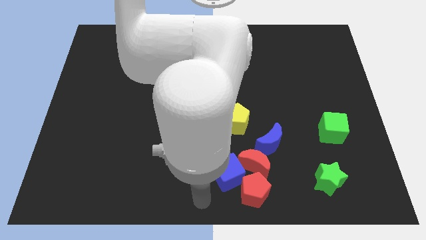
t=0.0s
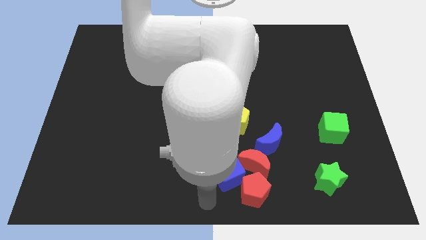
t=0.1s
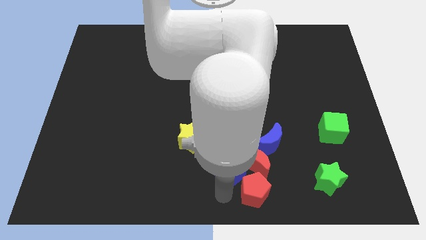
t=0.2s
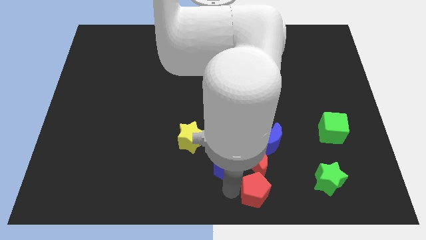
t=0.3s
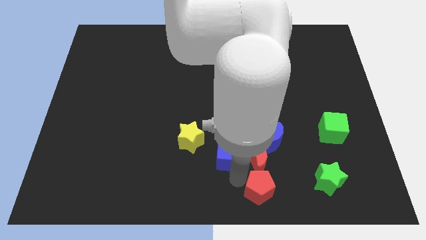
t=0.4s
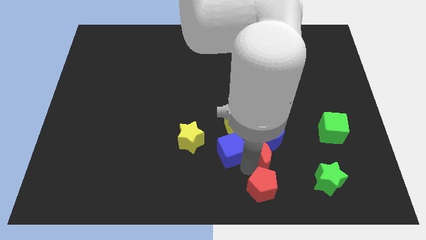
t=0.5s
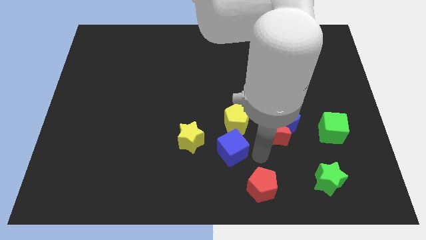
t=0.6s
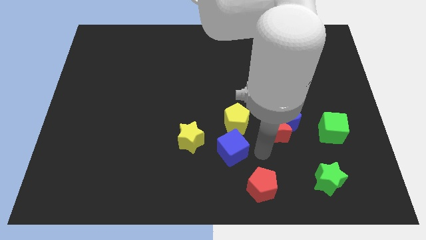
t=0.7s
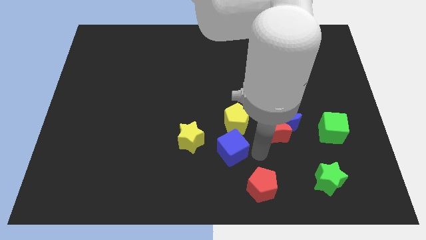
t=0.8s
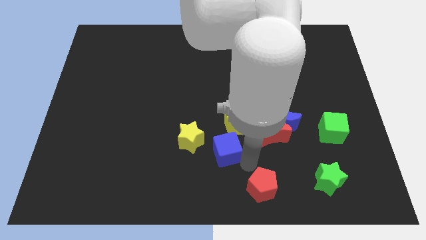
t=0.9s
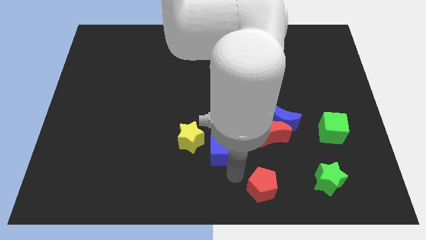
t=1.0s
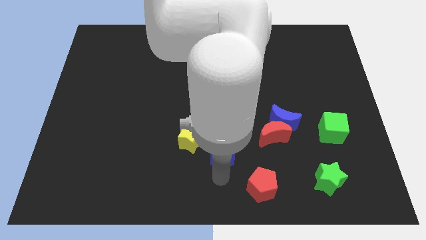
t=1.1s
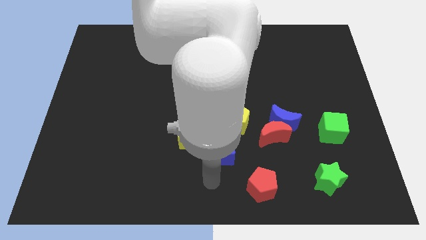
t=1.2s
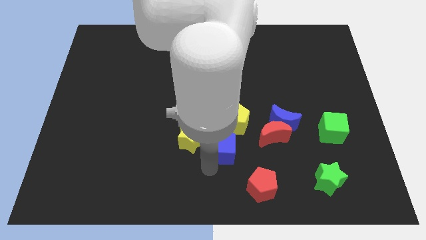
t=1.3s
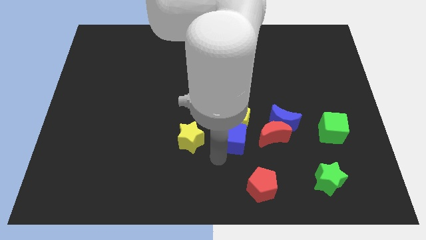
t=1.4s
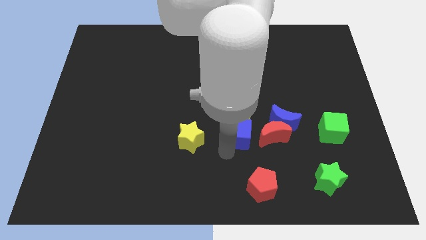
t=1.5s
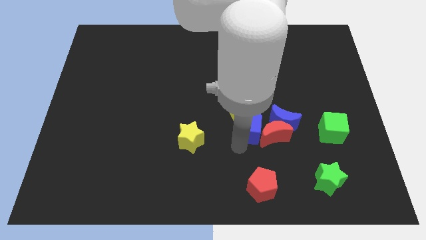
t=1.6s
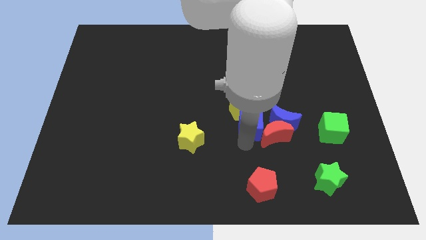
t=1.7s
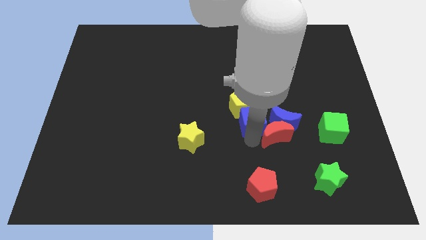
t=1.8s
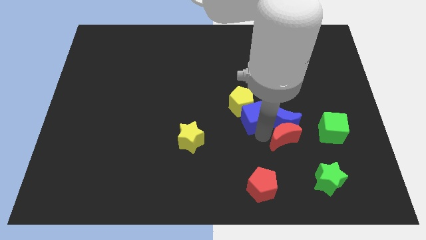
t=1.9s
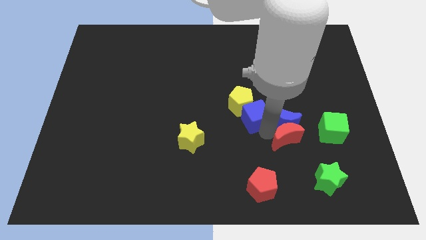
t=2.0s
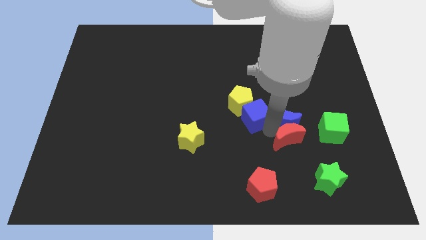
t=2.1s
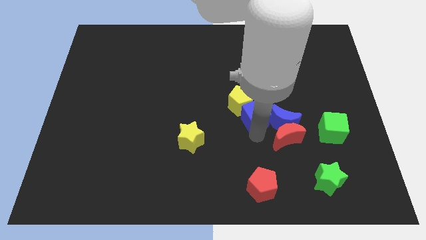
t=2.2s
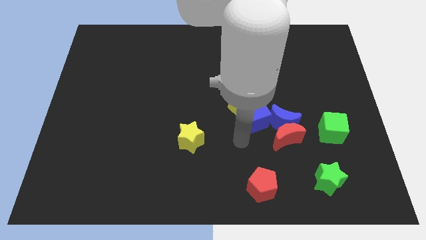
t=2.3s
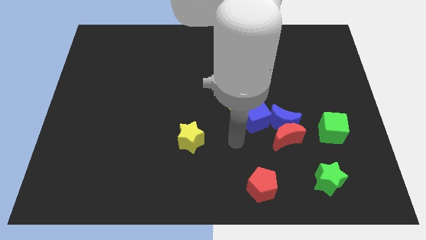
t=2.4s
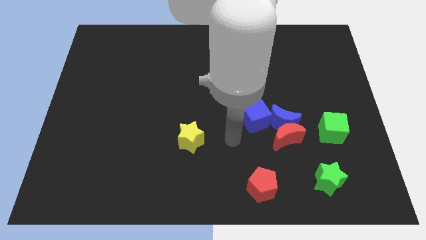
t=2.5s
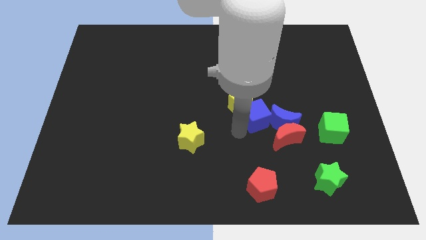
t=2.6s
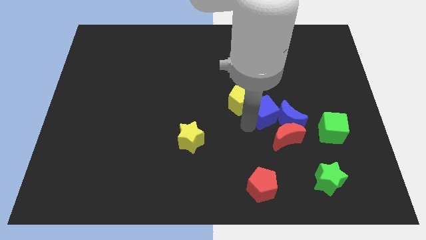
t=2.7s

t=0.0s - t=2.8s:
adjust the blue cube in between the yellow pentagon and blue crescent

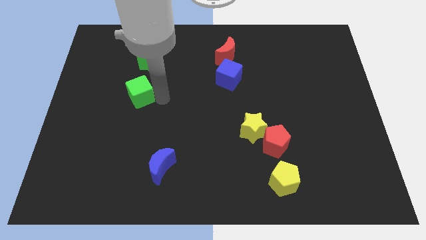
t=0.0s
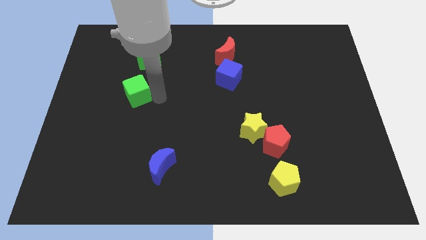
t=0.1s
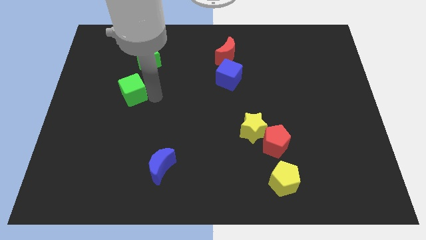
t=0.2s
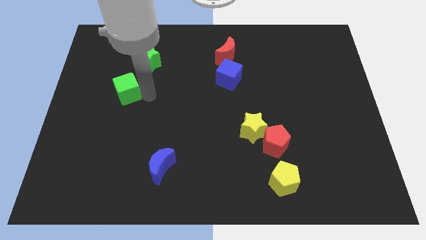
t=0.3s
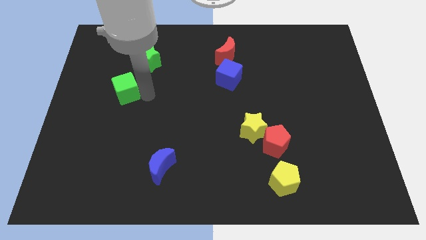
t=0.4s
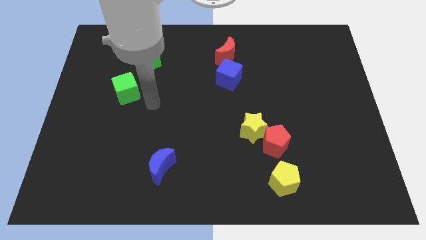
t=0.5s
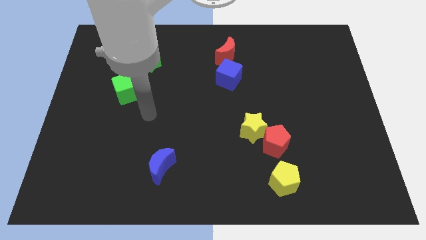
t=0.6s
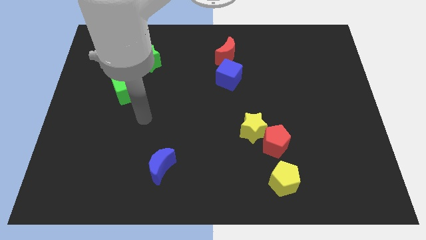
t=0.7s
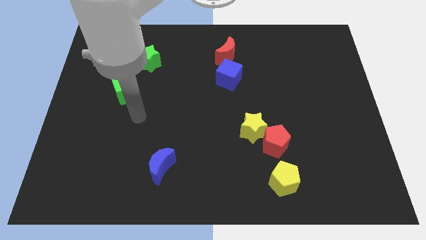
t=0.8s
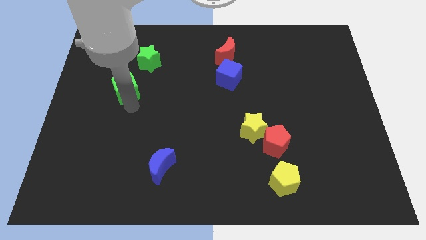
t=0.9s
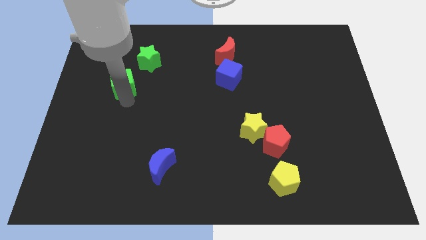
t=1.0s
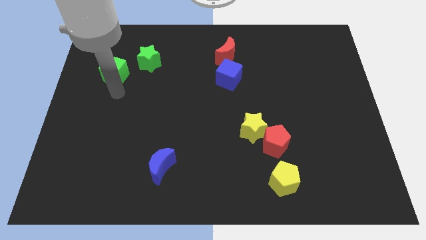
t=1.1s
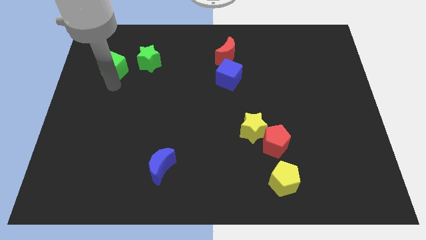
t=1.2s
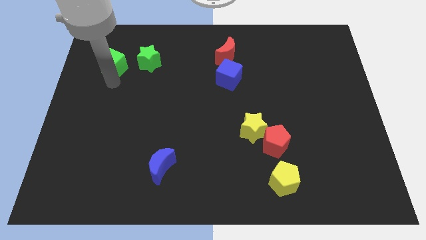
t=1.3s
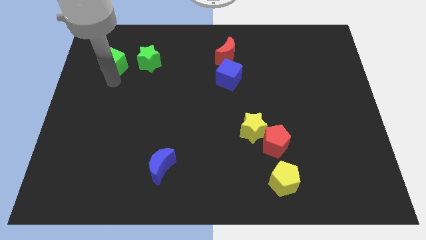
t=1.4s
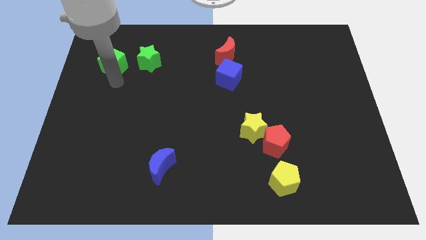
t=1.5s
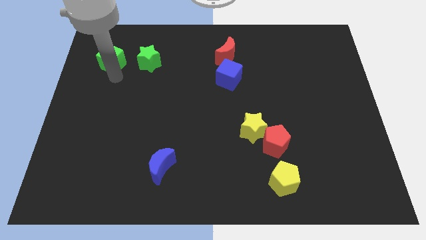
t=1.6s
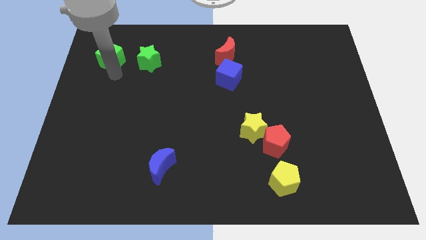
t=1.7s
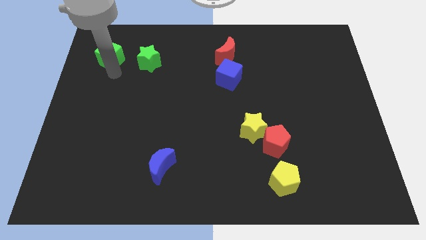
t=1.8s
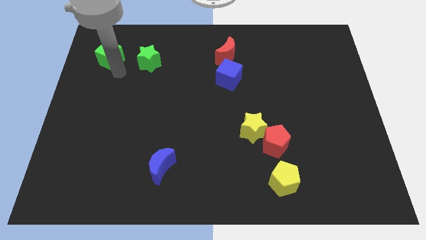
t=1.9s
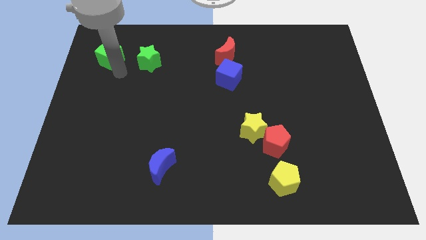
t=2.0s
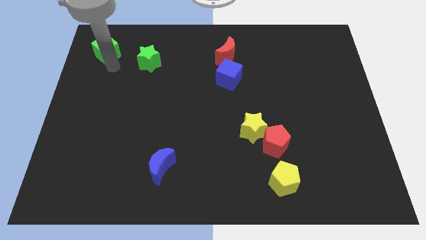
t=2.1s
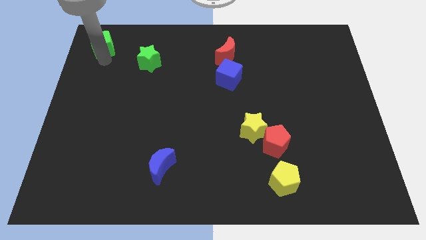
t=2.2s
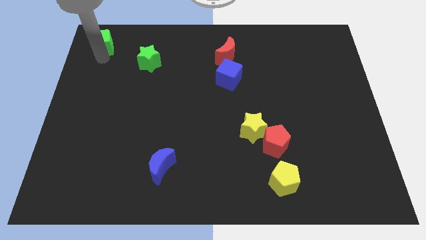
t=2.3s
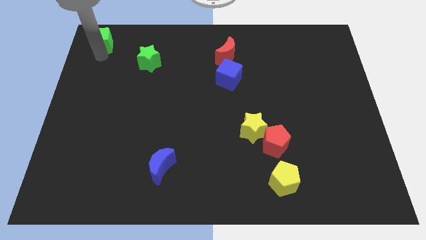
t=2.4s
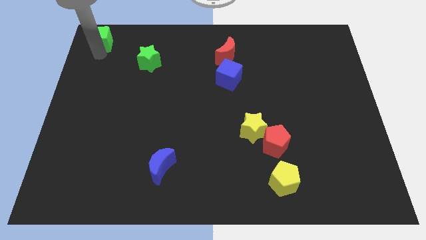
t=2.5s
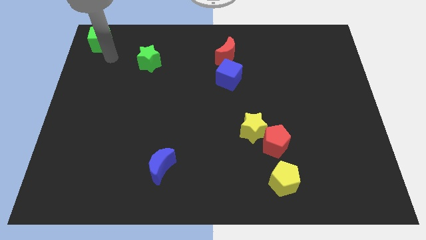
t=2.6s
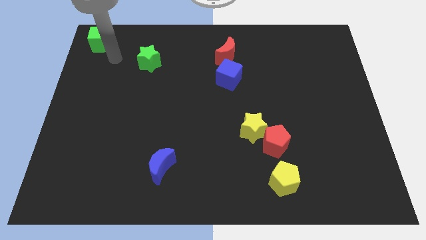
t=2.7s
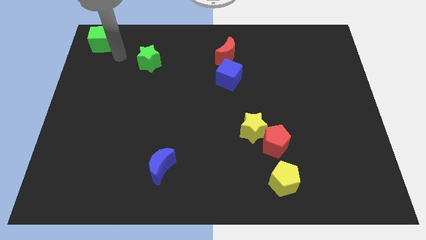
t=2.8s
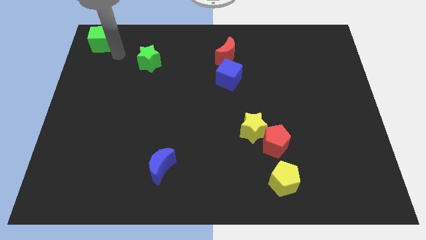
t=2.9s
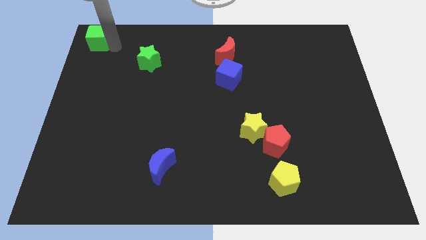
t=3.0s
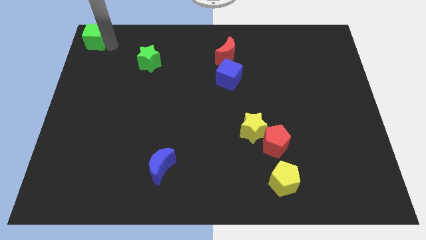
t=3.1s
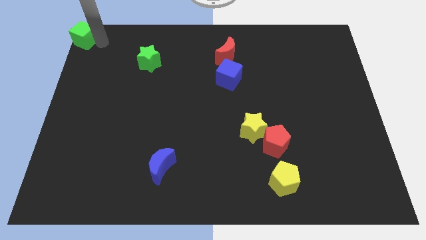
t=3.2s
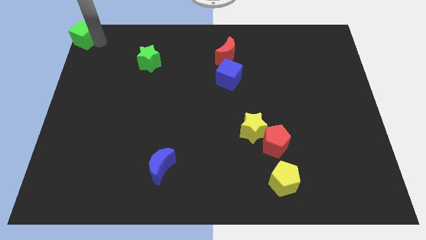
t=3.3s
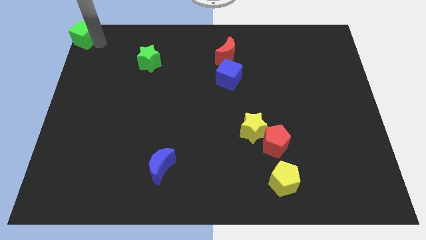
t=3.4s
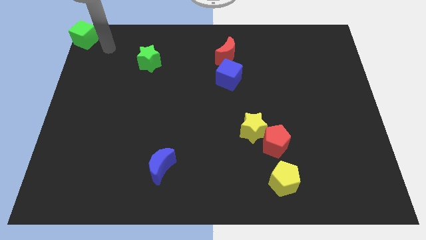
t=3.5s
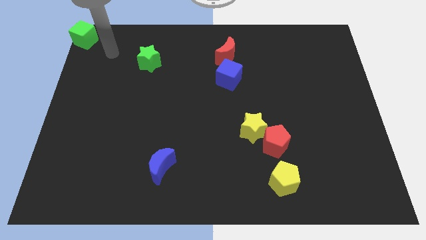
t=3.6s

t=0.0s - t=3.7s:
push the green cube to the top left

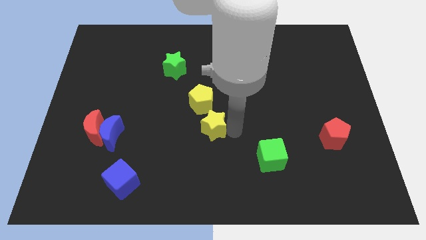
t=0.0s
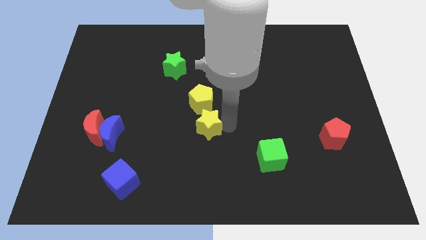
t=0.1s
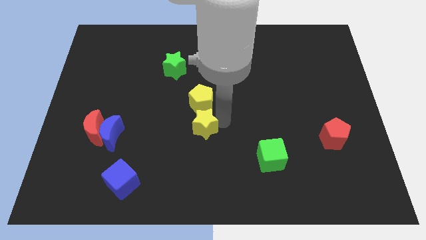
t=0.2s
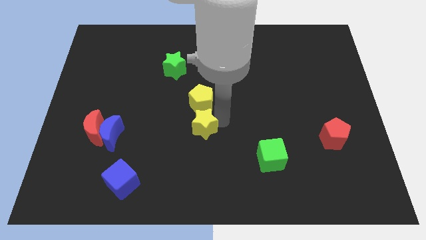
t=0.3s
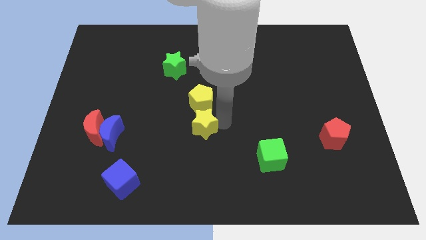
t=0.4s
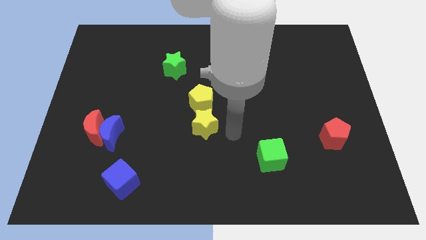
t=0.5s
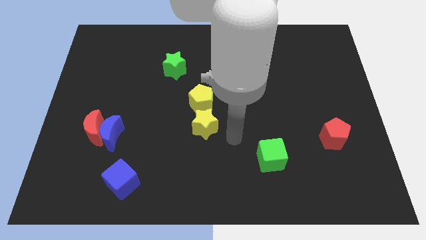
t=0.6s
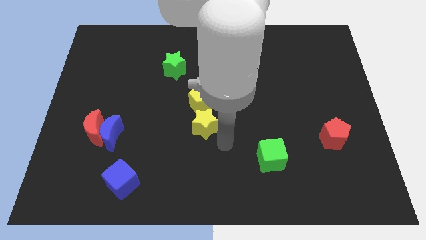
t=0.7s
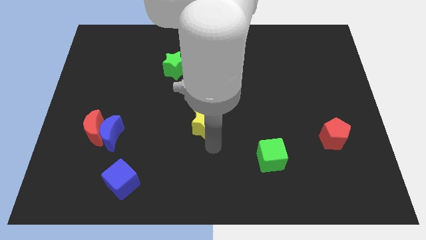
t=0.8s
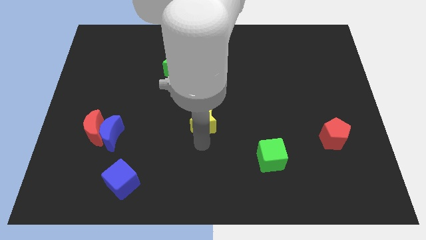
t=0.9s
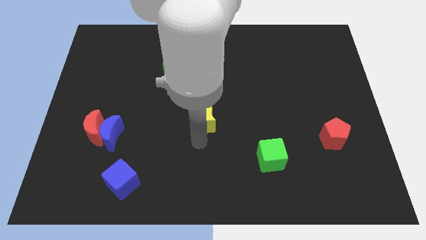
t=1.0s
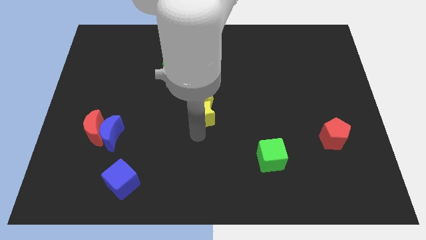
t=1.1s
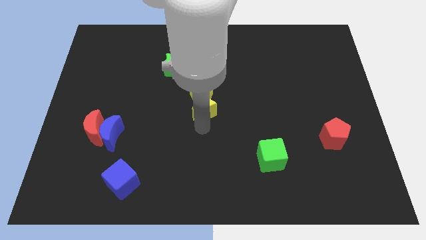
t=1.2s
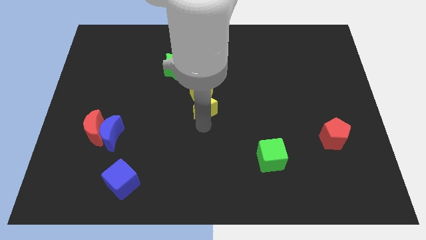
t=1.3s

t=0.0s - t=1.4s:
push the yellow star into the yellow pentagon

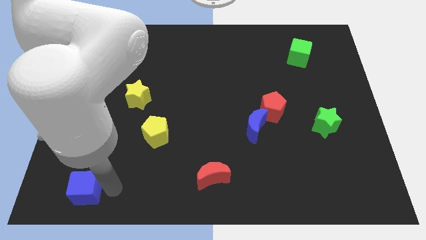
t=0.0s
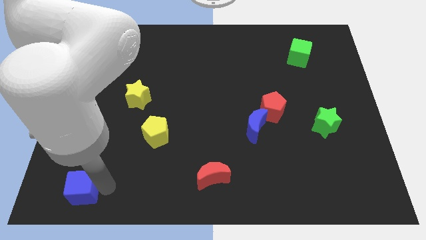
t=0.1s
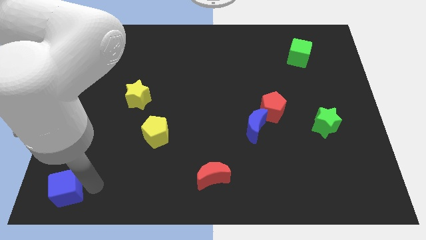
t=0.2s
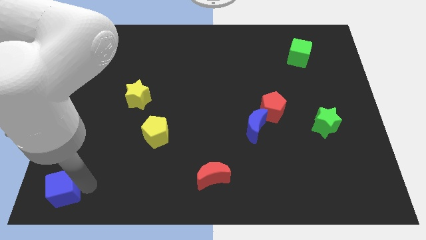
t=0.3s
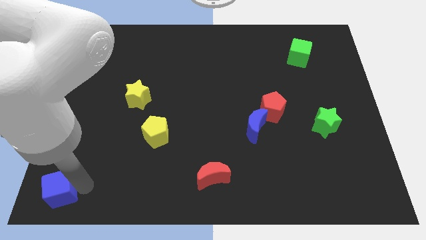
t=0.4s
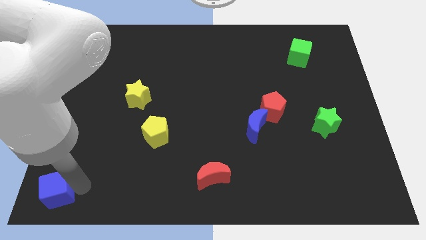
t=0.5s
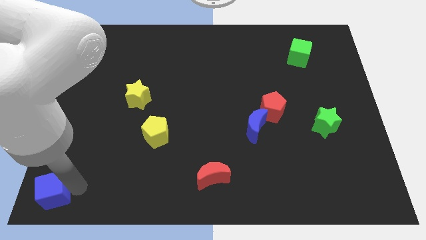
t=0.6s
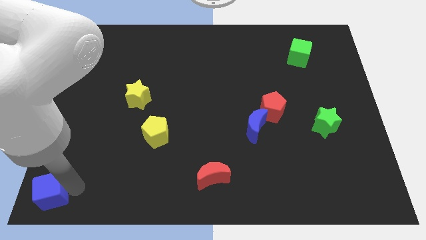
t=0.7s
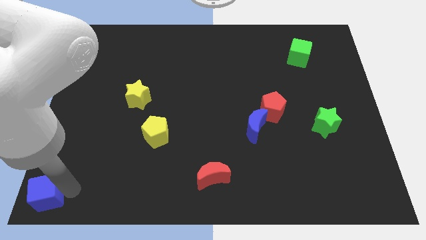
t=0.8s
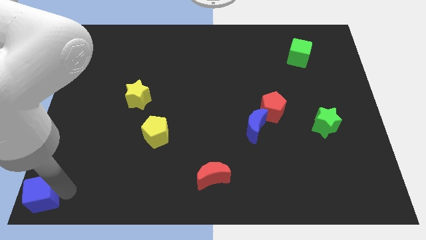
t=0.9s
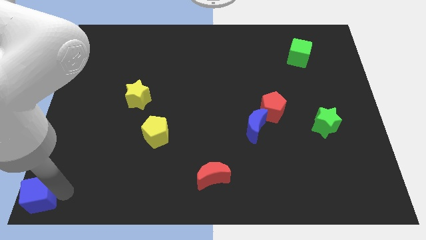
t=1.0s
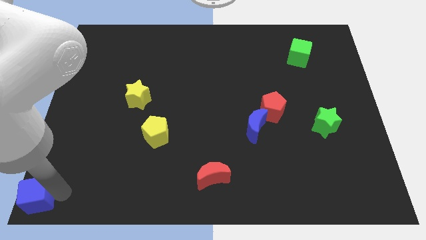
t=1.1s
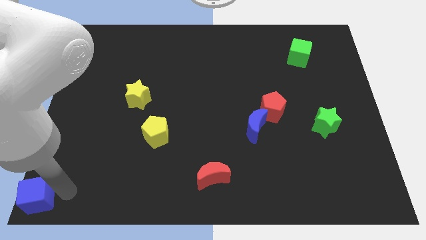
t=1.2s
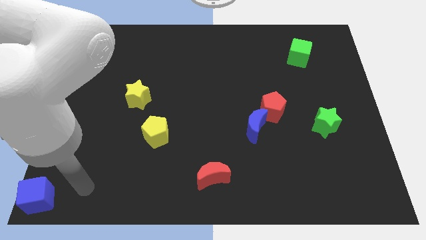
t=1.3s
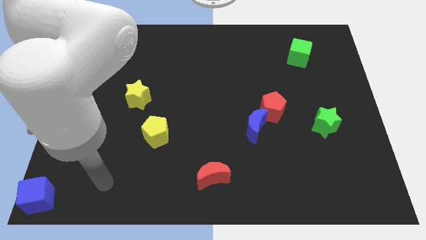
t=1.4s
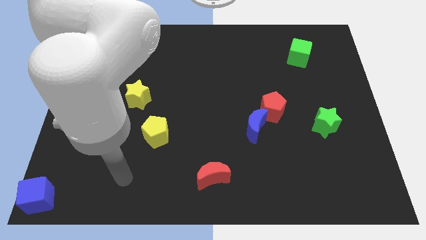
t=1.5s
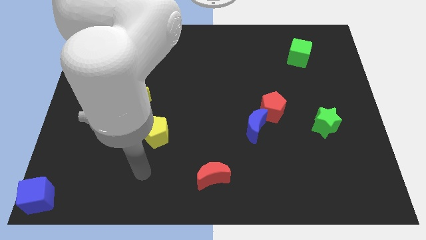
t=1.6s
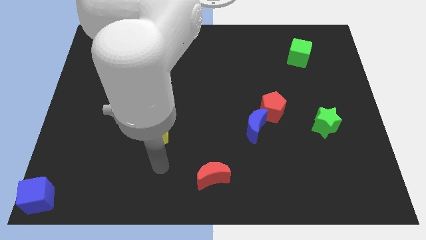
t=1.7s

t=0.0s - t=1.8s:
move the blue cube to the bottom left corner of the board
